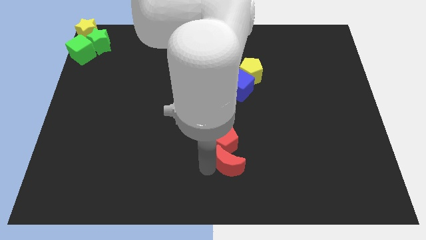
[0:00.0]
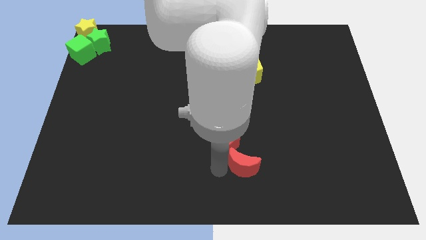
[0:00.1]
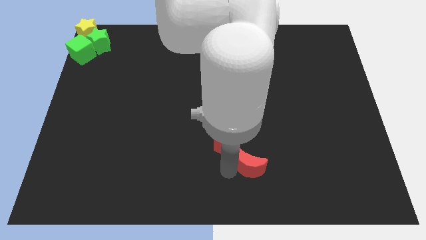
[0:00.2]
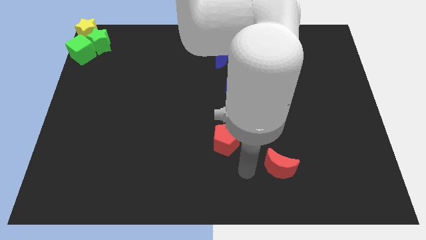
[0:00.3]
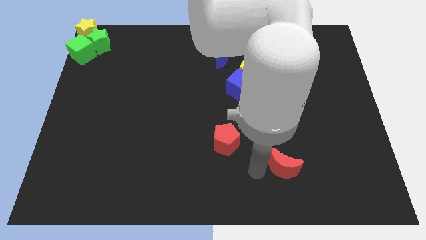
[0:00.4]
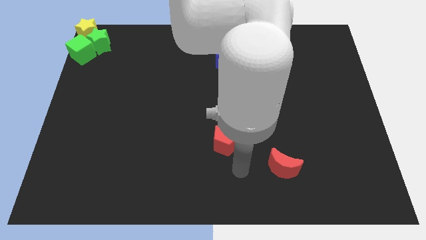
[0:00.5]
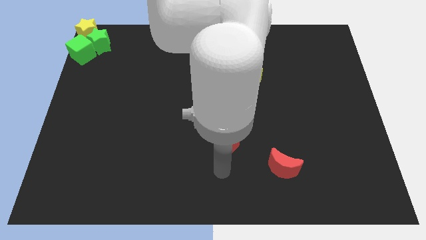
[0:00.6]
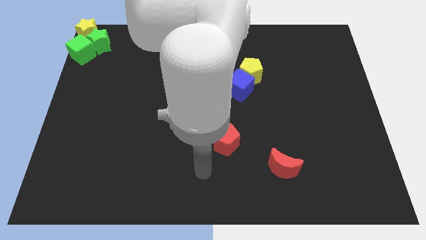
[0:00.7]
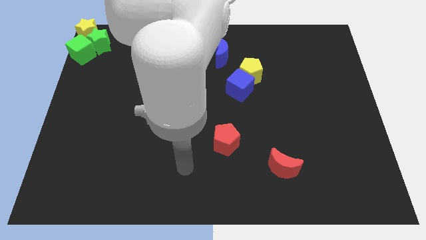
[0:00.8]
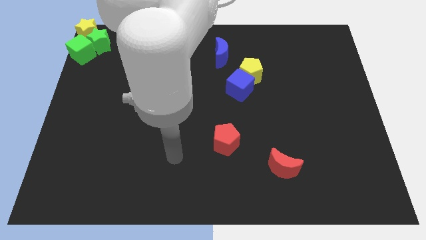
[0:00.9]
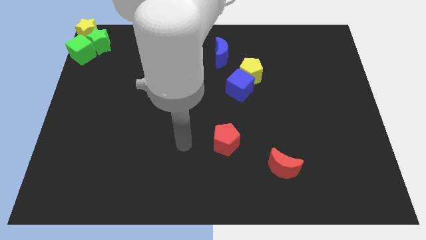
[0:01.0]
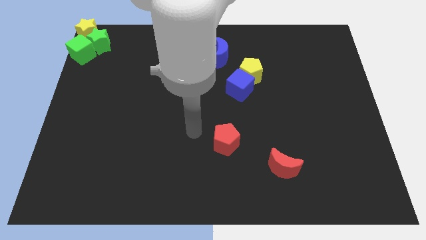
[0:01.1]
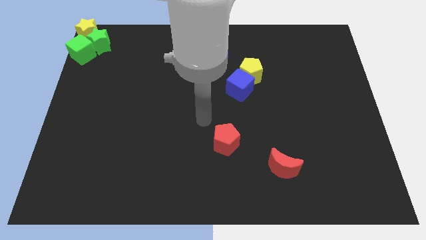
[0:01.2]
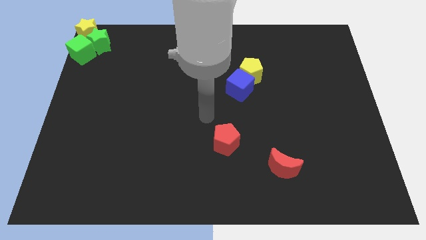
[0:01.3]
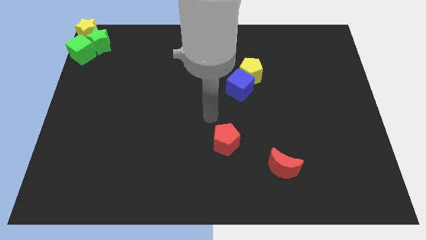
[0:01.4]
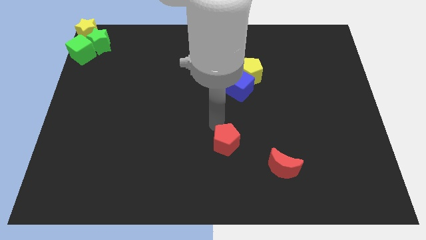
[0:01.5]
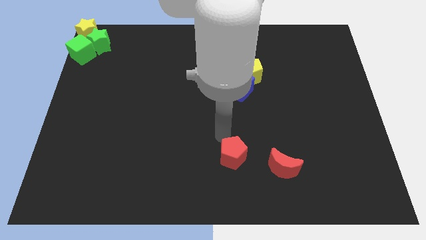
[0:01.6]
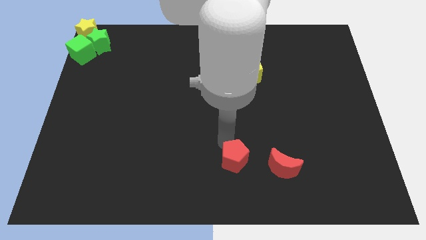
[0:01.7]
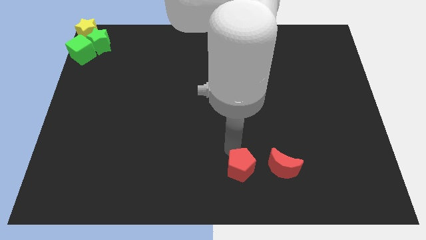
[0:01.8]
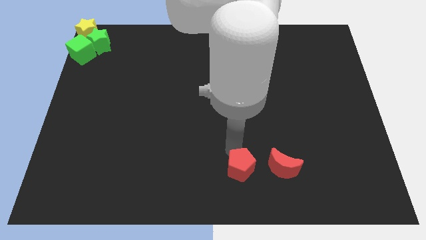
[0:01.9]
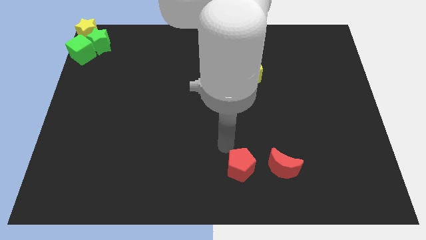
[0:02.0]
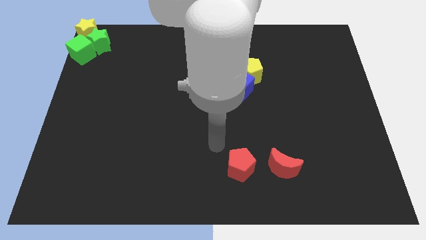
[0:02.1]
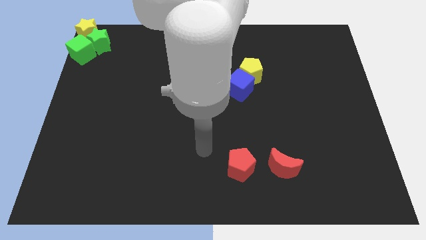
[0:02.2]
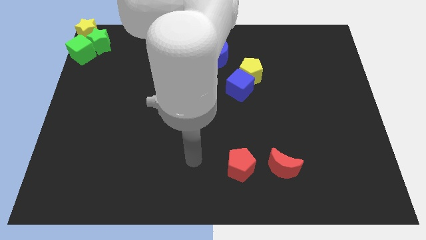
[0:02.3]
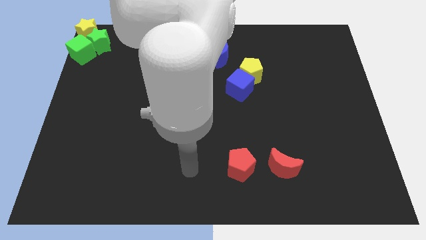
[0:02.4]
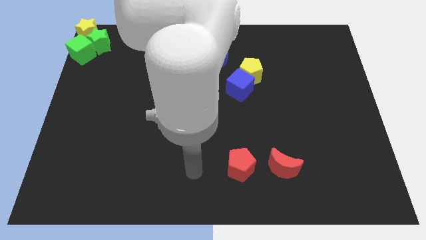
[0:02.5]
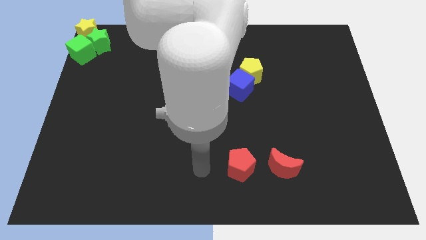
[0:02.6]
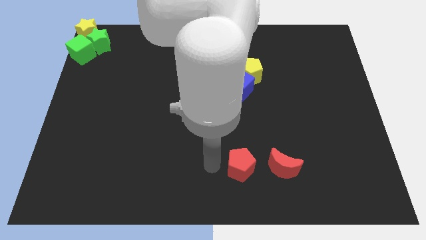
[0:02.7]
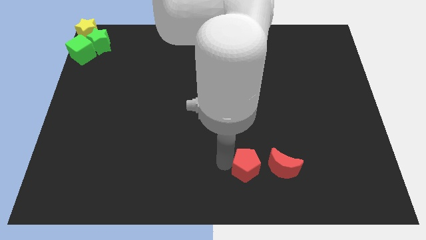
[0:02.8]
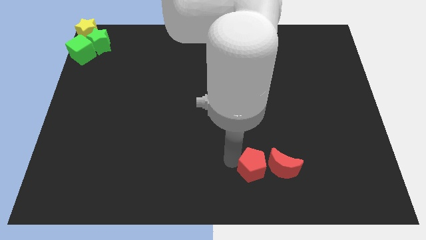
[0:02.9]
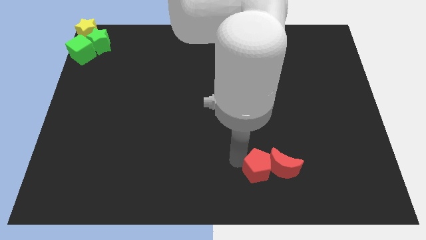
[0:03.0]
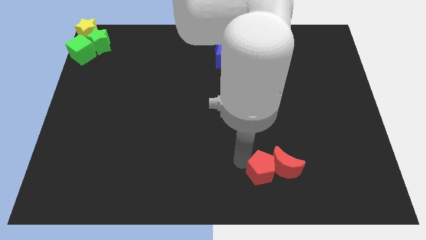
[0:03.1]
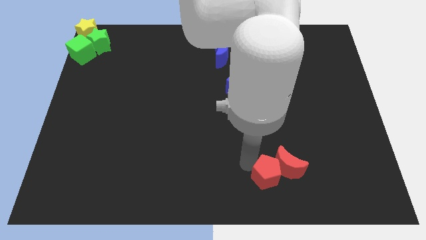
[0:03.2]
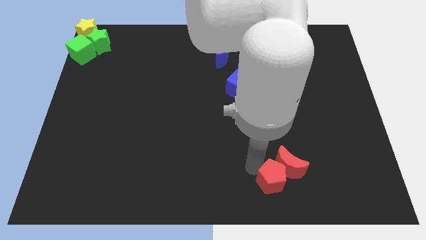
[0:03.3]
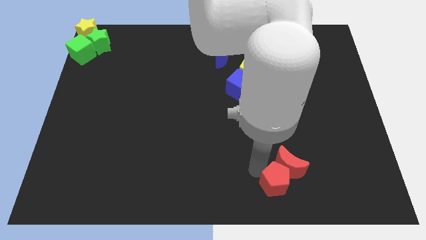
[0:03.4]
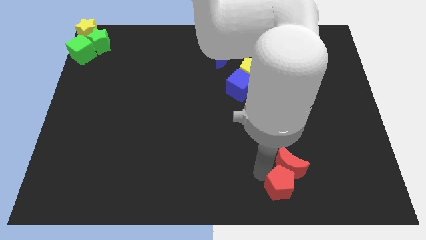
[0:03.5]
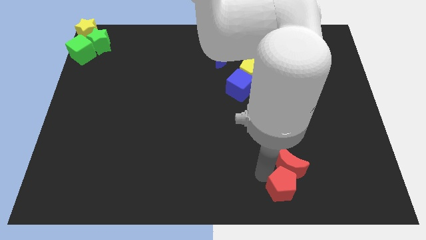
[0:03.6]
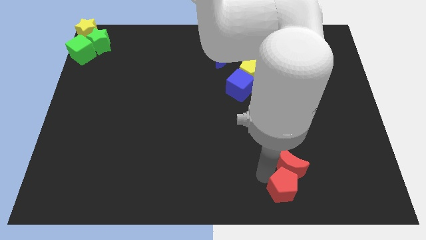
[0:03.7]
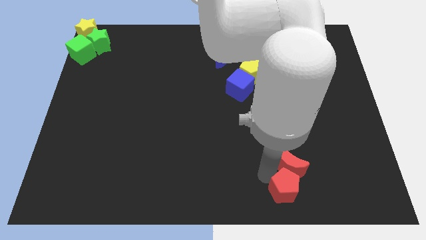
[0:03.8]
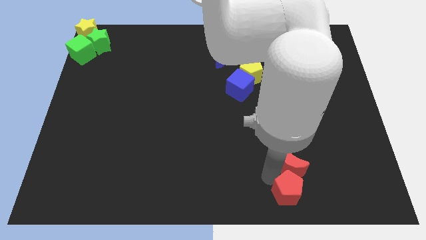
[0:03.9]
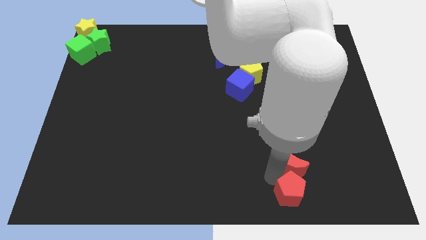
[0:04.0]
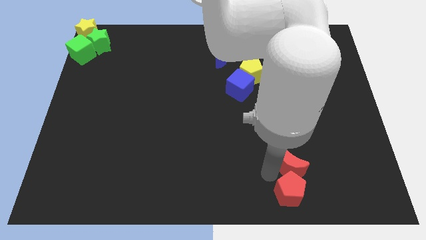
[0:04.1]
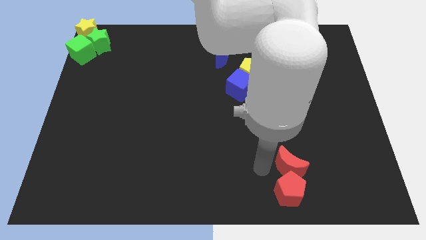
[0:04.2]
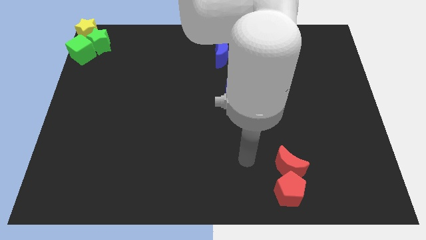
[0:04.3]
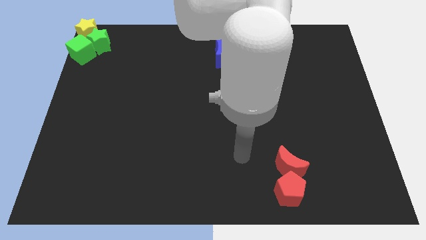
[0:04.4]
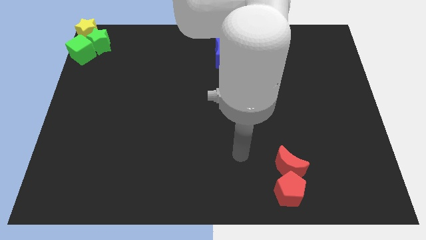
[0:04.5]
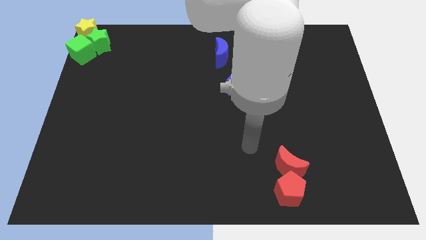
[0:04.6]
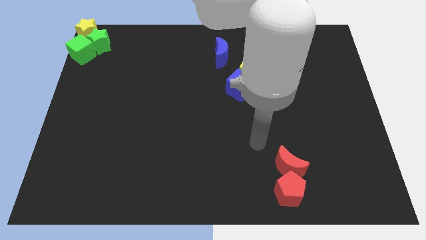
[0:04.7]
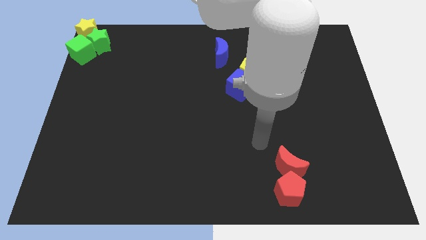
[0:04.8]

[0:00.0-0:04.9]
place the red pentagon below the red moon

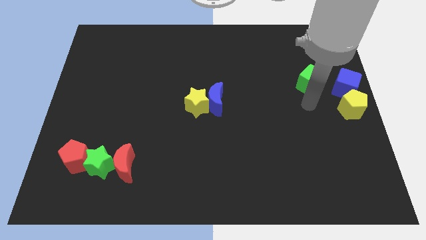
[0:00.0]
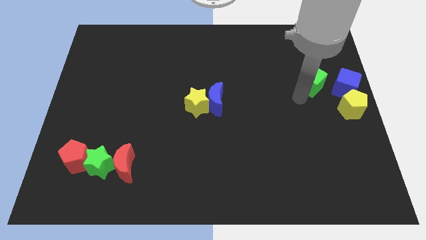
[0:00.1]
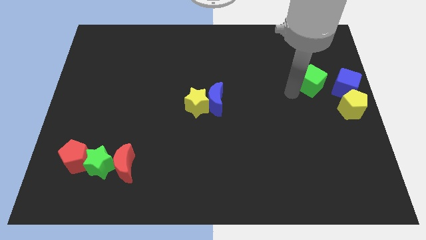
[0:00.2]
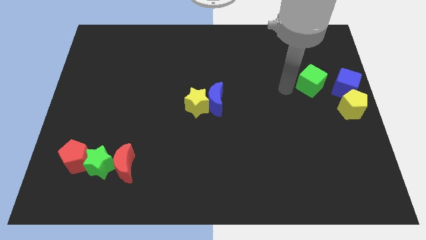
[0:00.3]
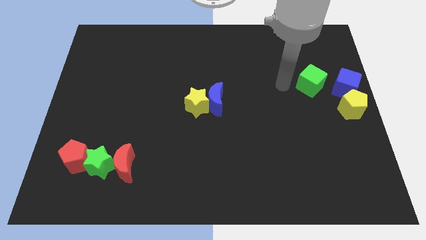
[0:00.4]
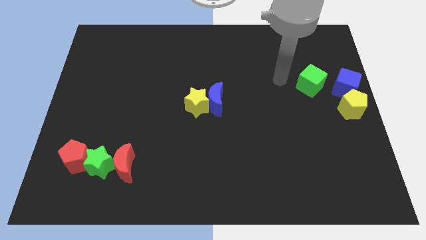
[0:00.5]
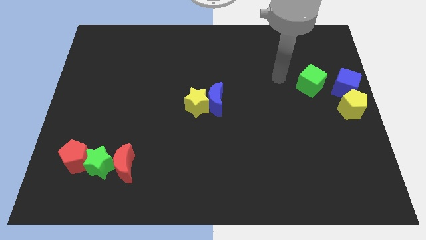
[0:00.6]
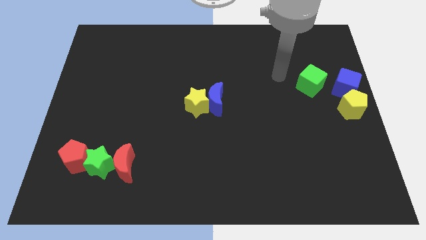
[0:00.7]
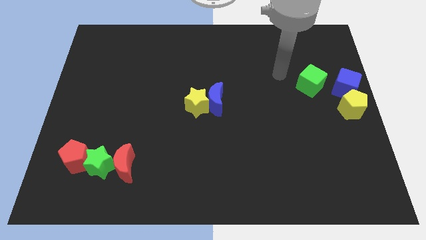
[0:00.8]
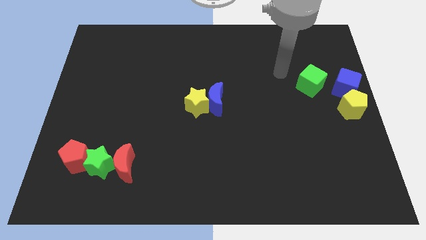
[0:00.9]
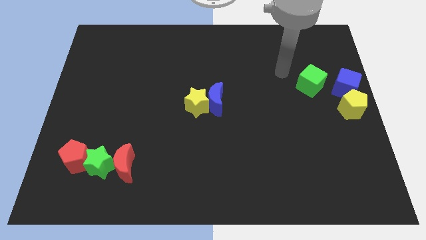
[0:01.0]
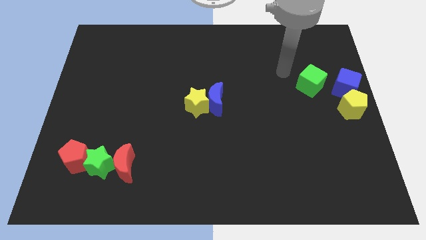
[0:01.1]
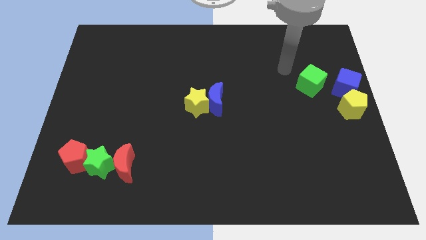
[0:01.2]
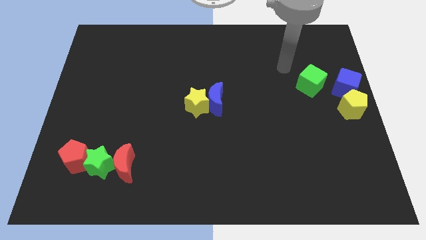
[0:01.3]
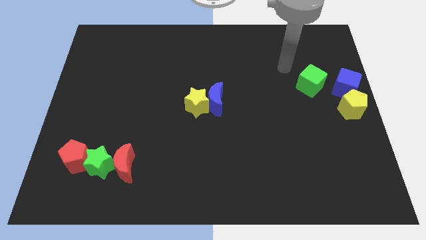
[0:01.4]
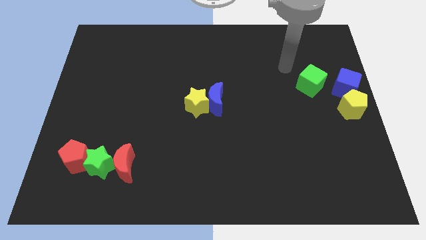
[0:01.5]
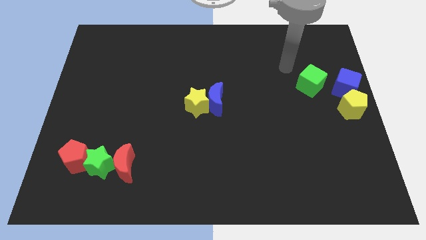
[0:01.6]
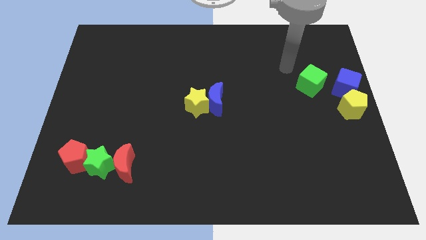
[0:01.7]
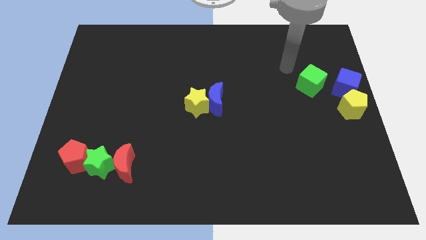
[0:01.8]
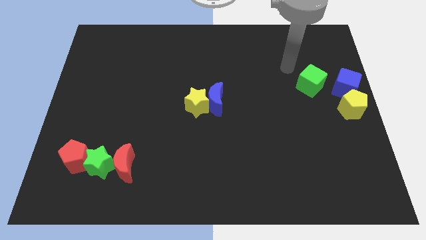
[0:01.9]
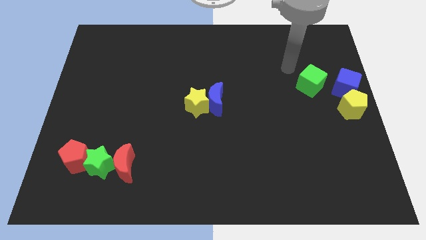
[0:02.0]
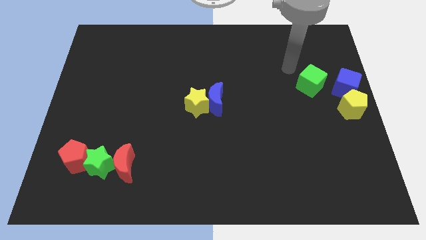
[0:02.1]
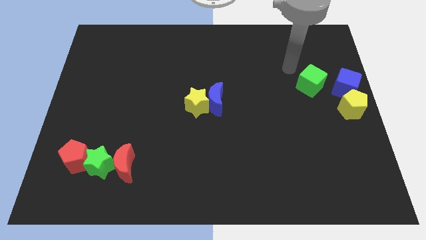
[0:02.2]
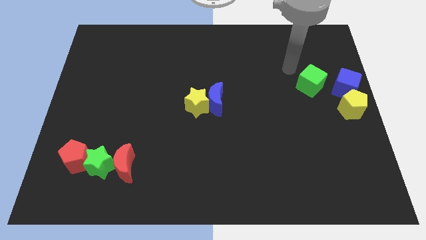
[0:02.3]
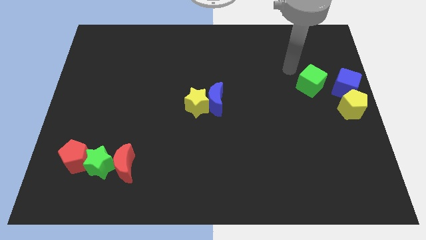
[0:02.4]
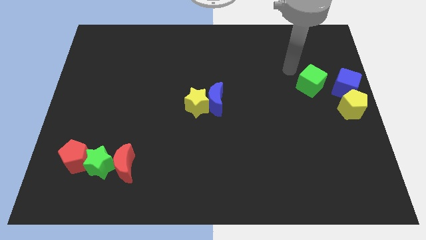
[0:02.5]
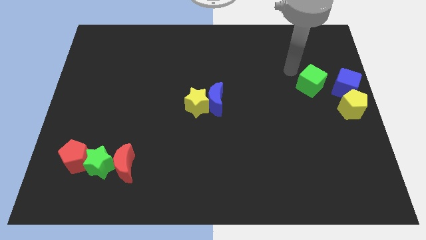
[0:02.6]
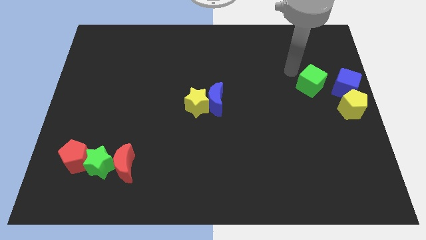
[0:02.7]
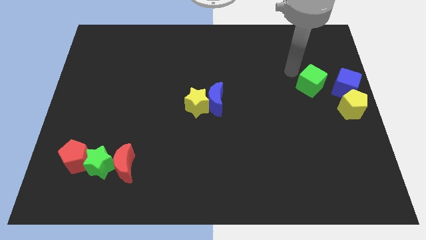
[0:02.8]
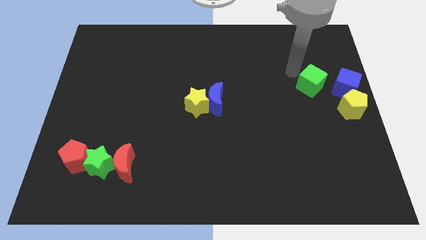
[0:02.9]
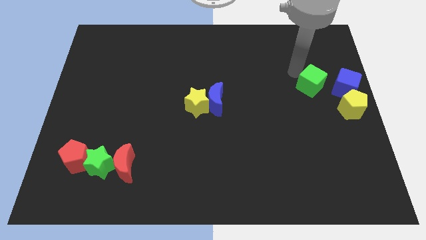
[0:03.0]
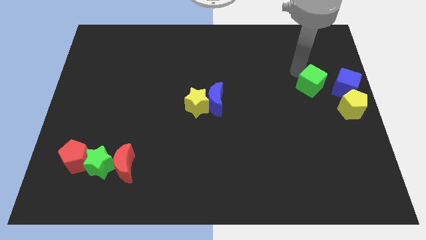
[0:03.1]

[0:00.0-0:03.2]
place your arm to the top left side of the green cube

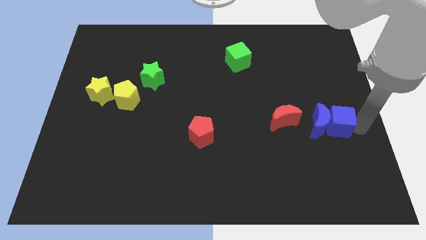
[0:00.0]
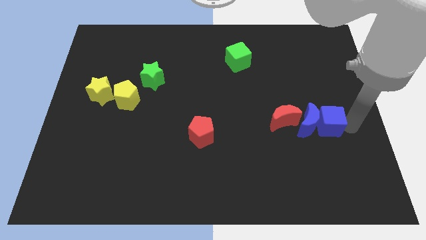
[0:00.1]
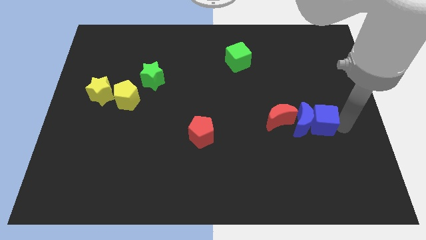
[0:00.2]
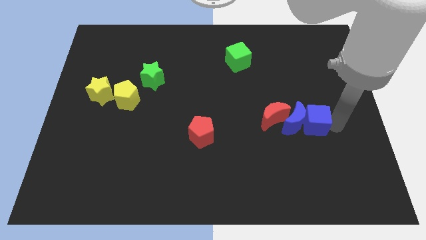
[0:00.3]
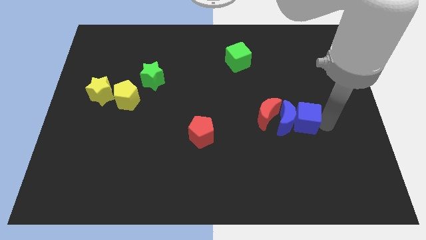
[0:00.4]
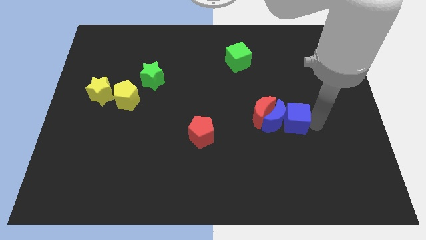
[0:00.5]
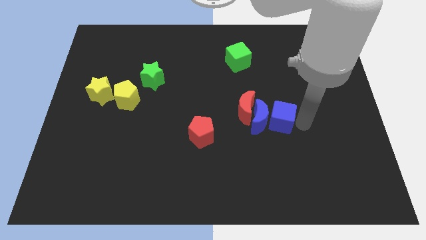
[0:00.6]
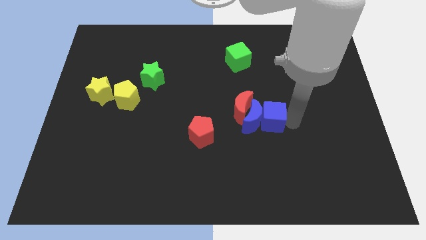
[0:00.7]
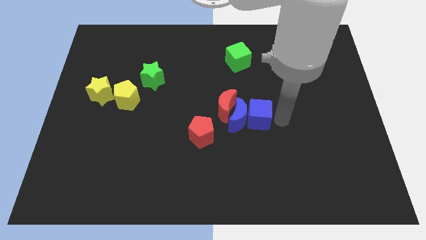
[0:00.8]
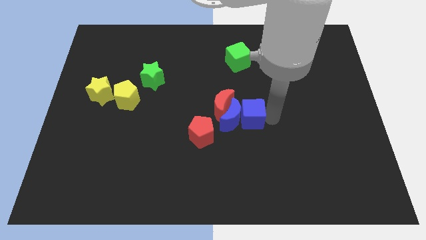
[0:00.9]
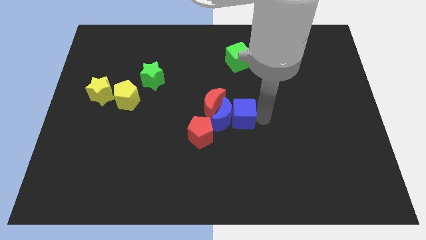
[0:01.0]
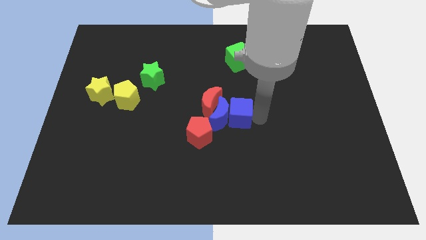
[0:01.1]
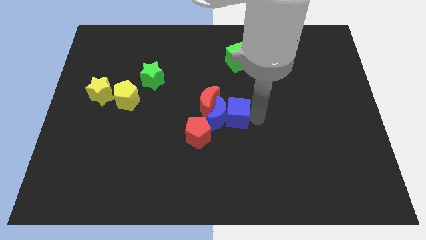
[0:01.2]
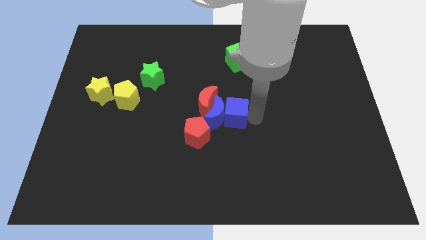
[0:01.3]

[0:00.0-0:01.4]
push the blue blocks along with red crescent towards the left
